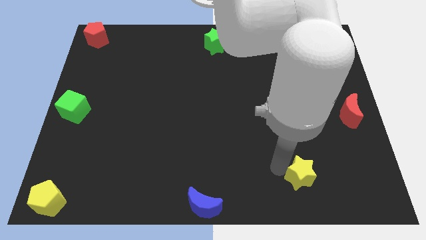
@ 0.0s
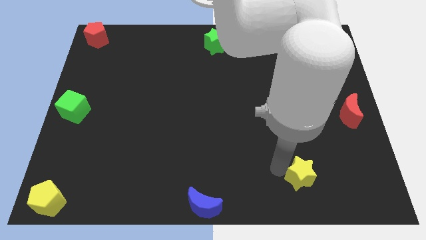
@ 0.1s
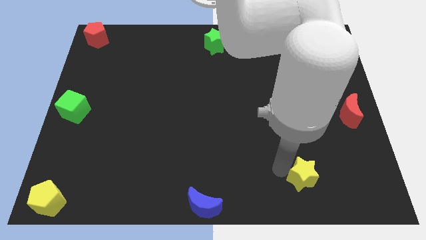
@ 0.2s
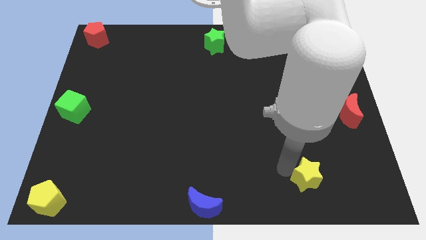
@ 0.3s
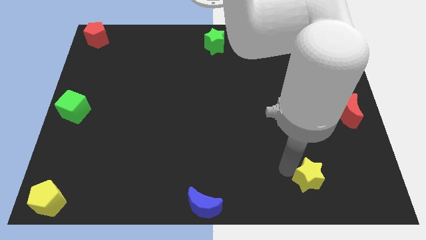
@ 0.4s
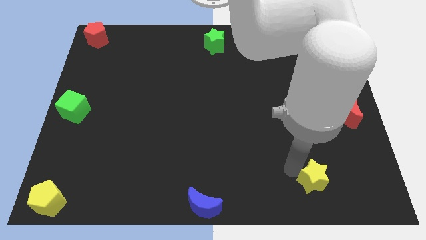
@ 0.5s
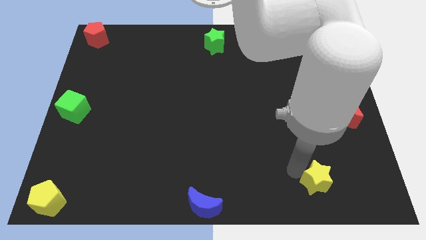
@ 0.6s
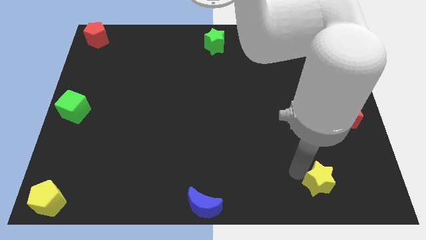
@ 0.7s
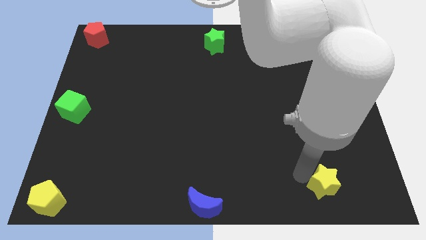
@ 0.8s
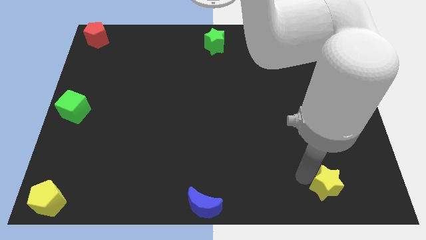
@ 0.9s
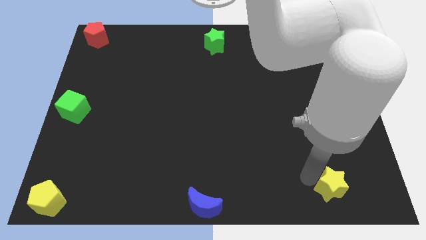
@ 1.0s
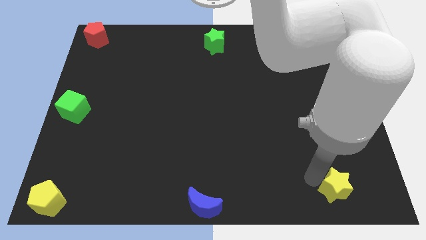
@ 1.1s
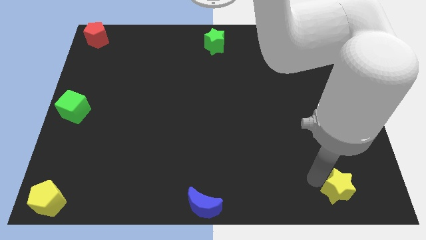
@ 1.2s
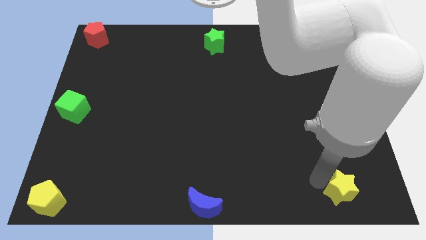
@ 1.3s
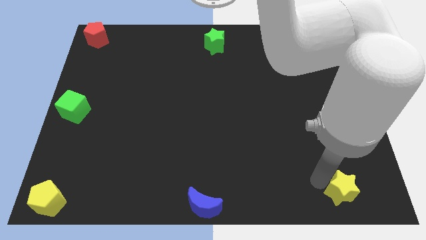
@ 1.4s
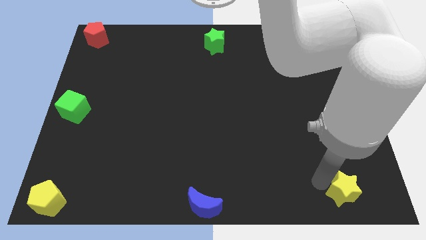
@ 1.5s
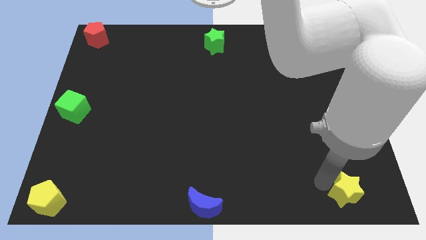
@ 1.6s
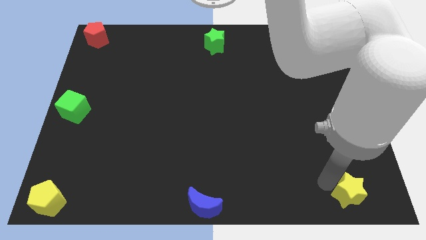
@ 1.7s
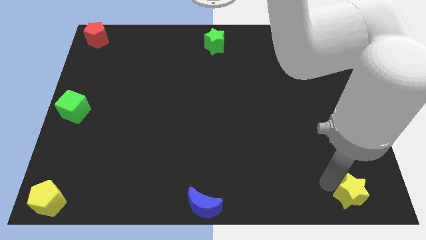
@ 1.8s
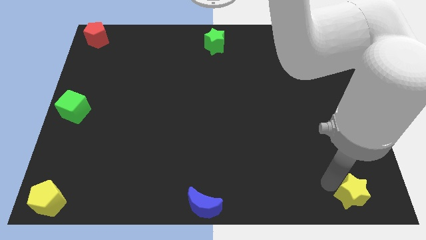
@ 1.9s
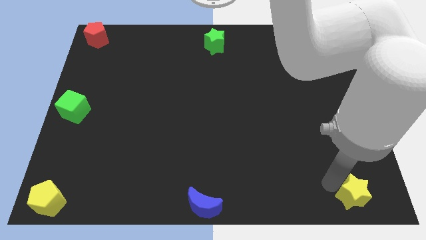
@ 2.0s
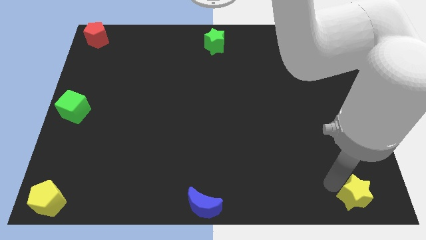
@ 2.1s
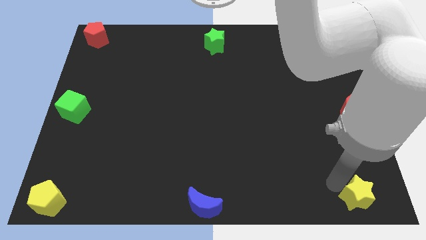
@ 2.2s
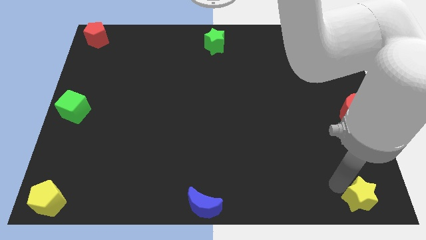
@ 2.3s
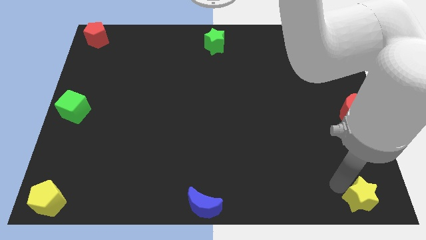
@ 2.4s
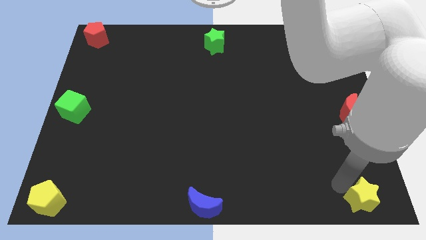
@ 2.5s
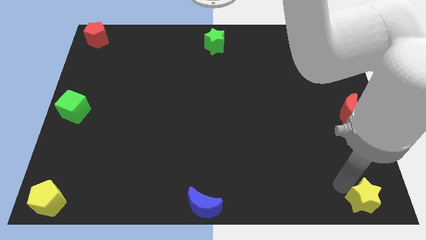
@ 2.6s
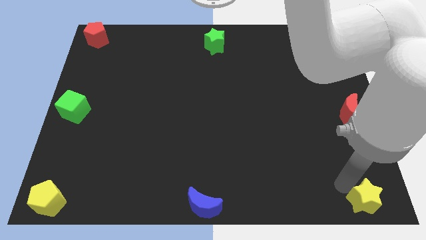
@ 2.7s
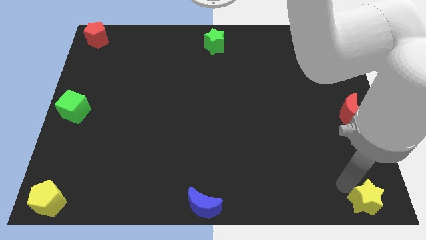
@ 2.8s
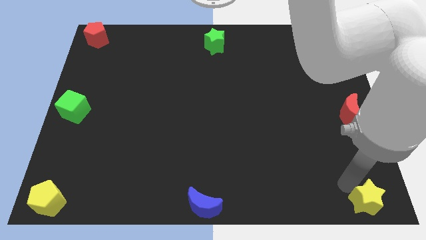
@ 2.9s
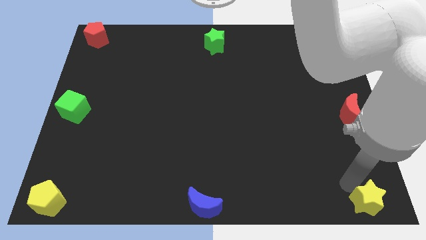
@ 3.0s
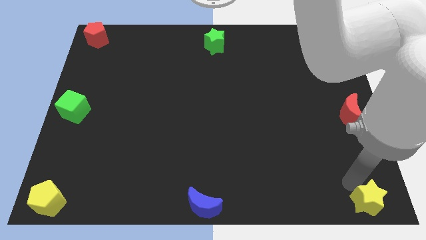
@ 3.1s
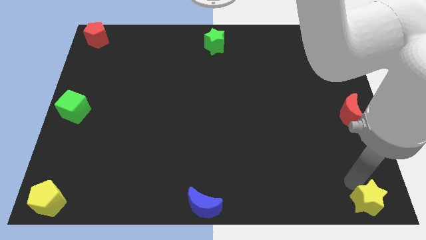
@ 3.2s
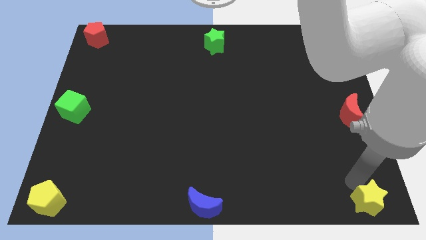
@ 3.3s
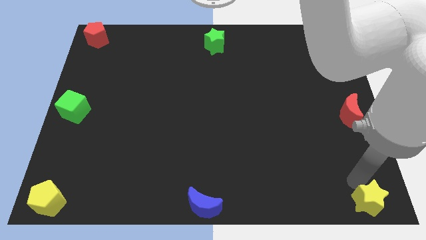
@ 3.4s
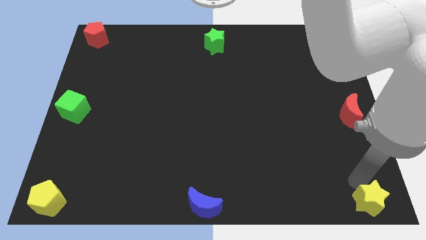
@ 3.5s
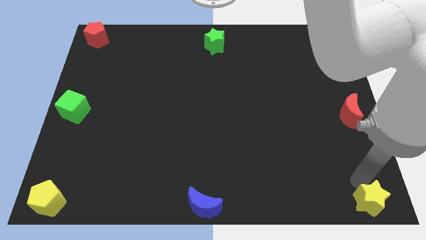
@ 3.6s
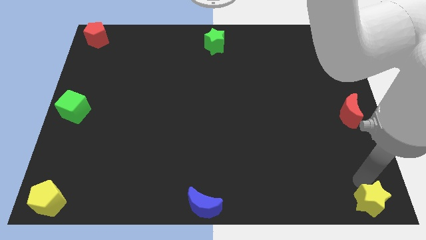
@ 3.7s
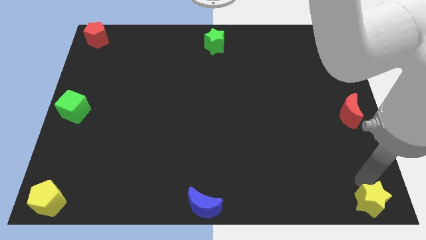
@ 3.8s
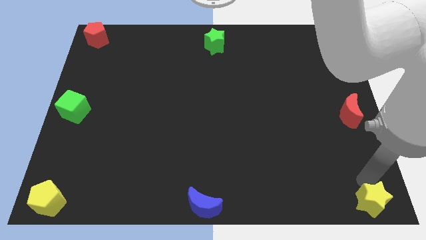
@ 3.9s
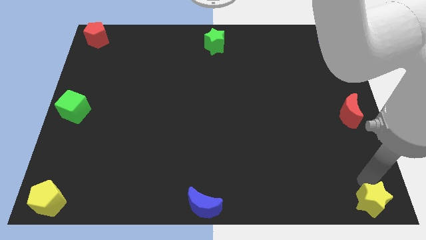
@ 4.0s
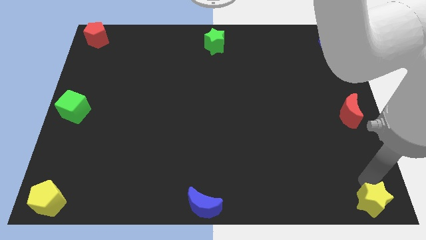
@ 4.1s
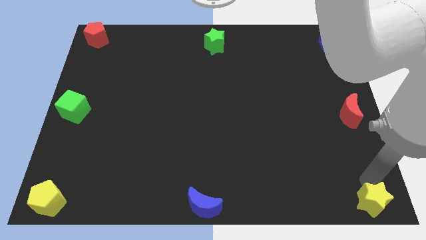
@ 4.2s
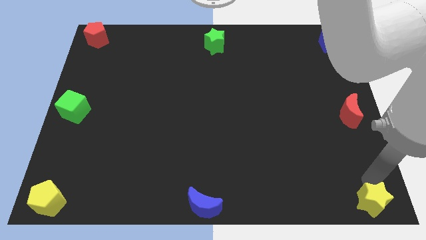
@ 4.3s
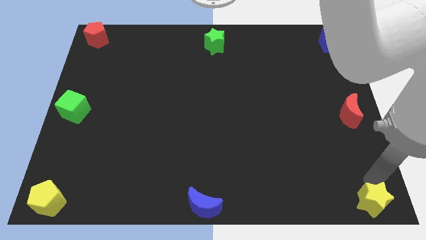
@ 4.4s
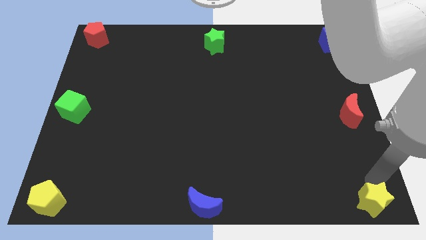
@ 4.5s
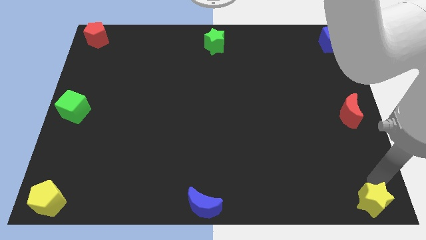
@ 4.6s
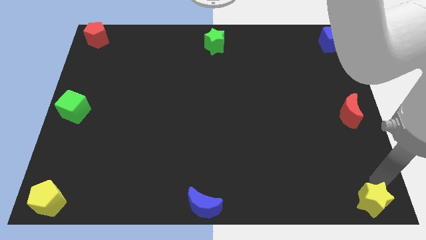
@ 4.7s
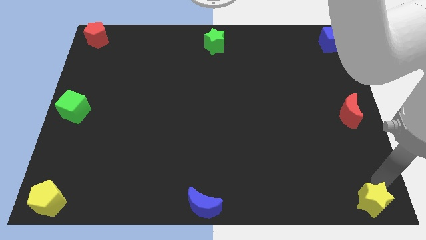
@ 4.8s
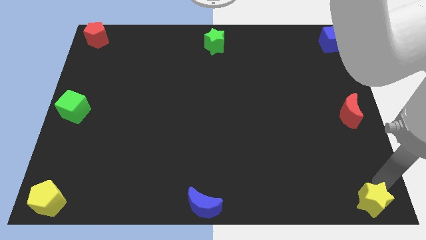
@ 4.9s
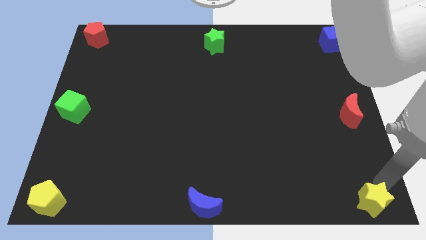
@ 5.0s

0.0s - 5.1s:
place the yellow star at the bottom right corner of the board

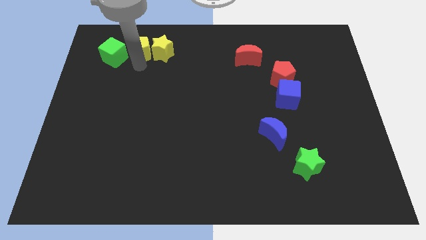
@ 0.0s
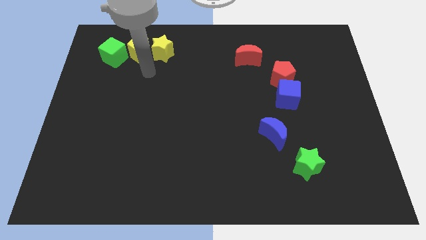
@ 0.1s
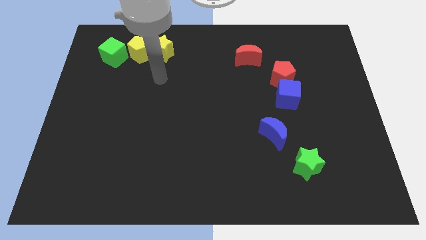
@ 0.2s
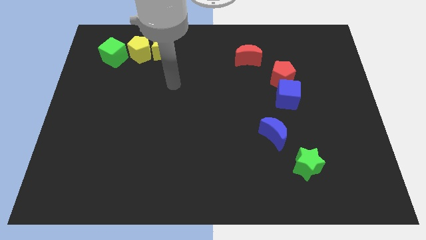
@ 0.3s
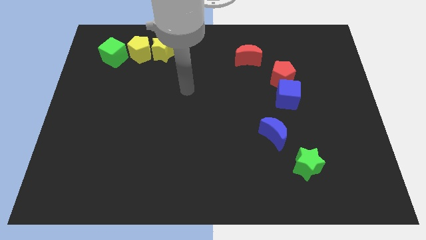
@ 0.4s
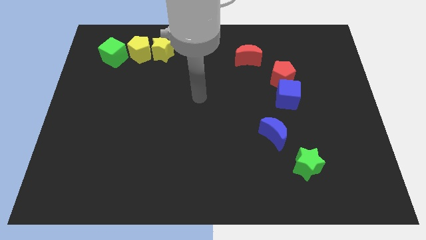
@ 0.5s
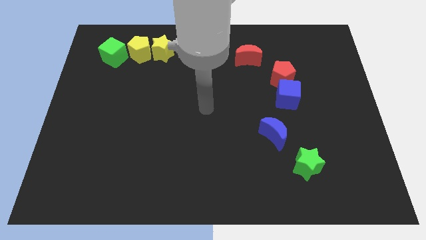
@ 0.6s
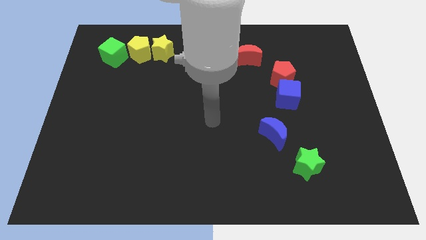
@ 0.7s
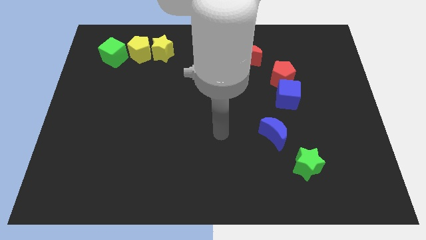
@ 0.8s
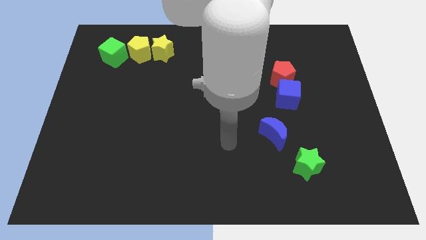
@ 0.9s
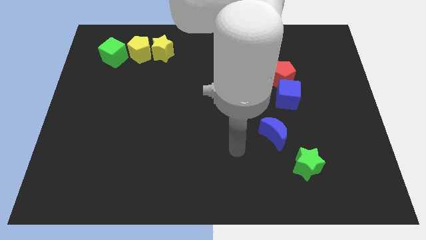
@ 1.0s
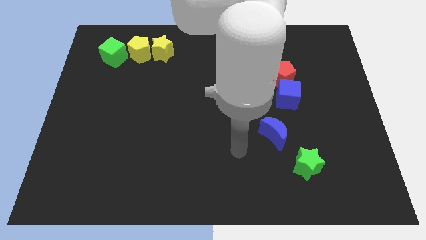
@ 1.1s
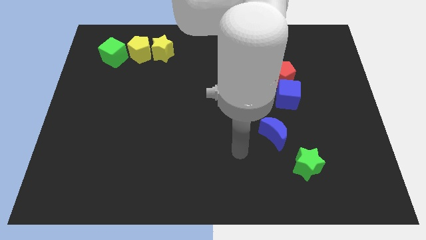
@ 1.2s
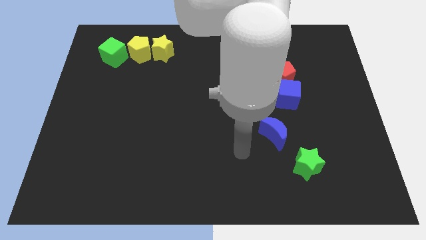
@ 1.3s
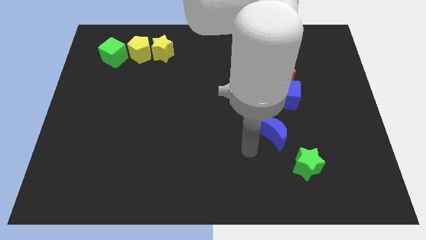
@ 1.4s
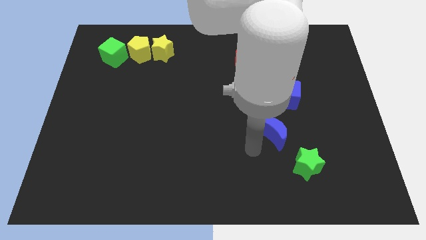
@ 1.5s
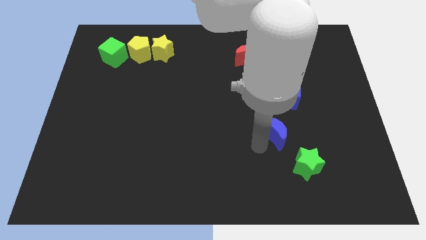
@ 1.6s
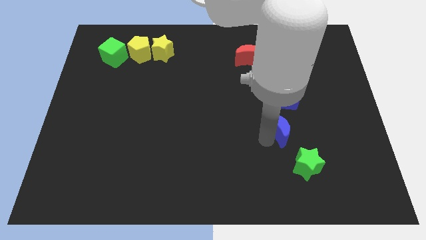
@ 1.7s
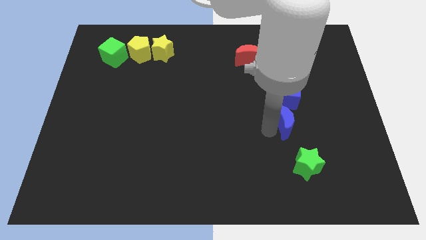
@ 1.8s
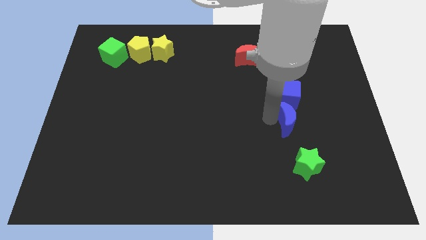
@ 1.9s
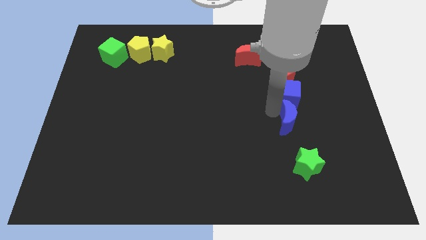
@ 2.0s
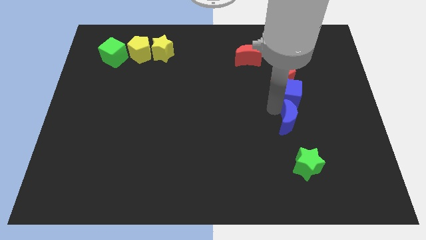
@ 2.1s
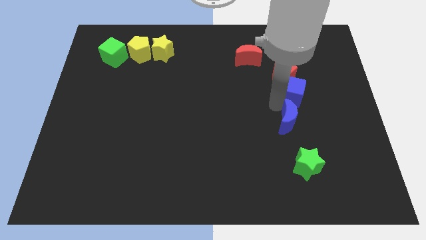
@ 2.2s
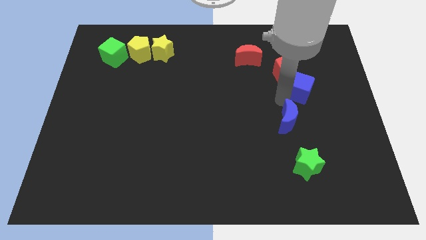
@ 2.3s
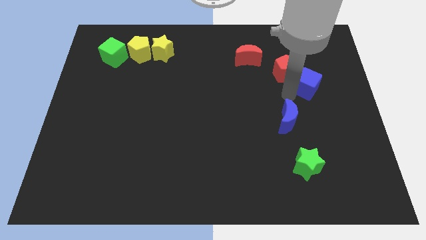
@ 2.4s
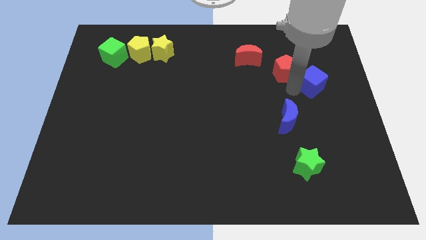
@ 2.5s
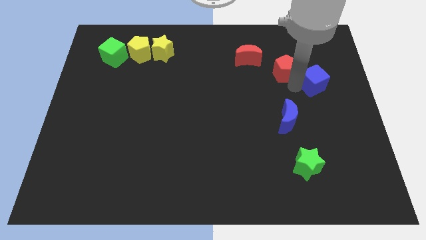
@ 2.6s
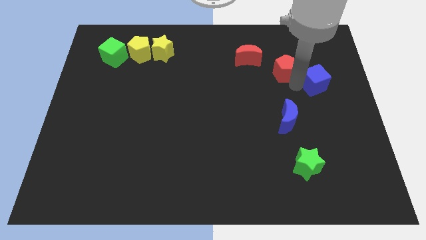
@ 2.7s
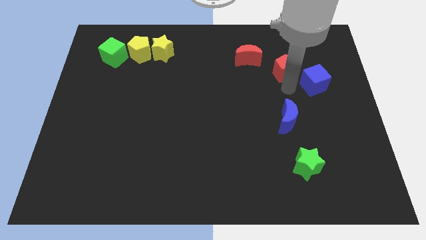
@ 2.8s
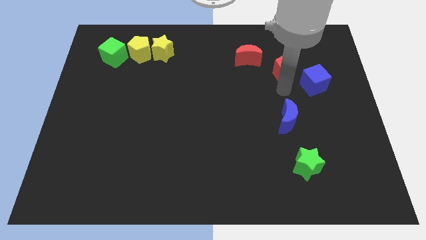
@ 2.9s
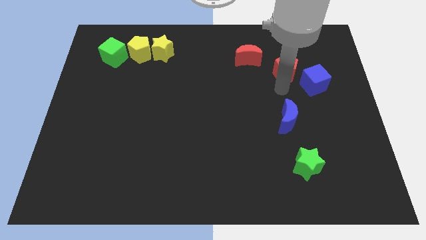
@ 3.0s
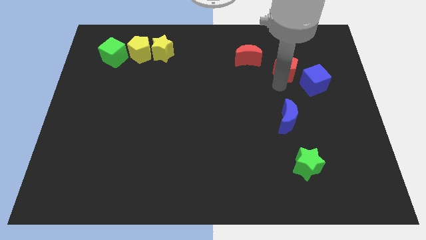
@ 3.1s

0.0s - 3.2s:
separate the blue blocks

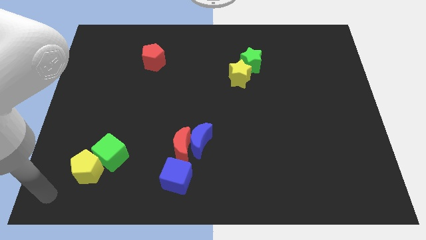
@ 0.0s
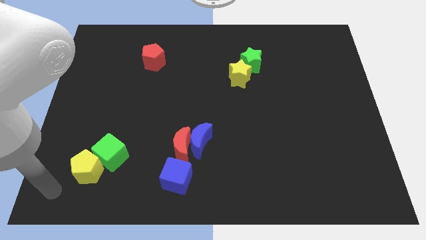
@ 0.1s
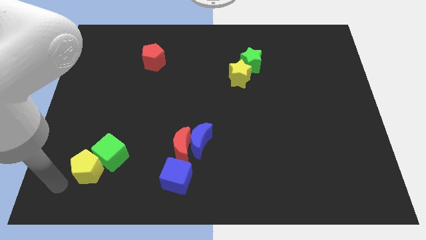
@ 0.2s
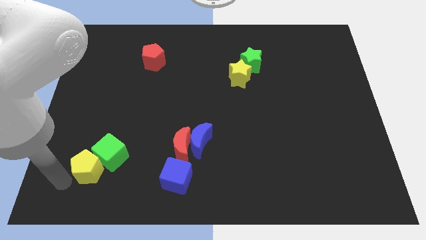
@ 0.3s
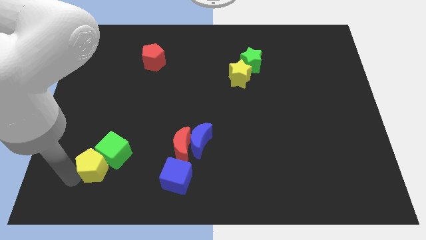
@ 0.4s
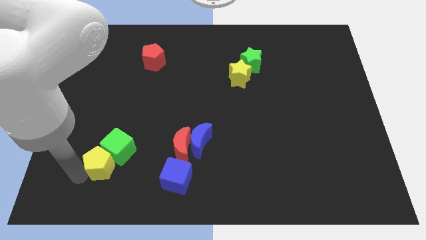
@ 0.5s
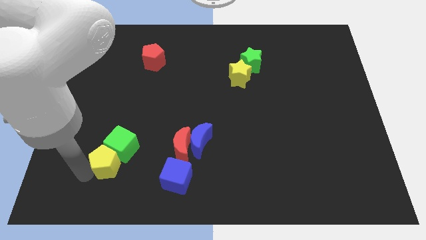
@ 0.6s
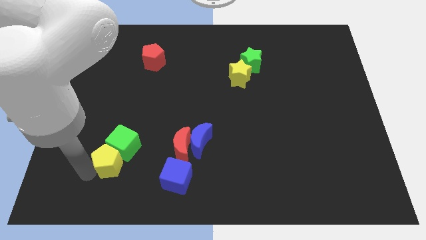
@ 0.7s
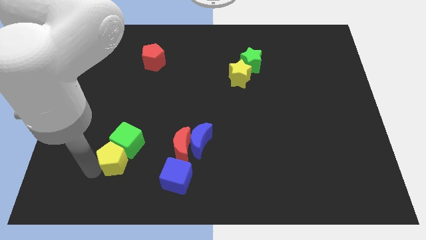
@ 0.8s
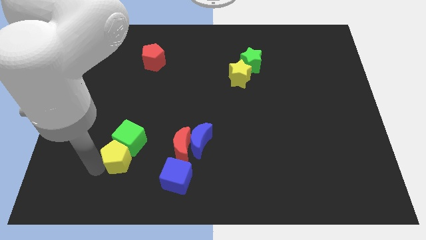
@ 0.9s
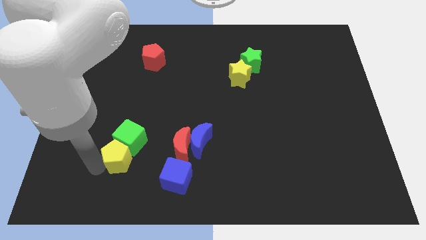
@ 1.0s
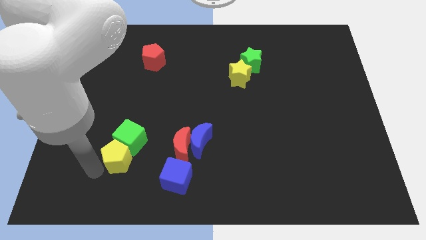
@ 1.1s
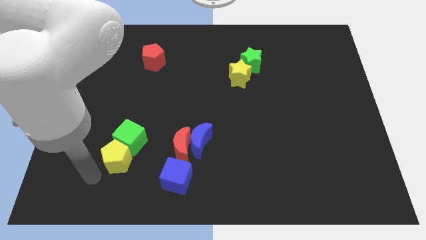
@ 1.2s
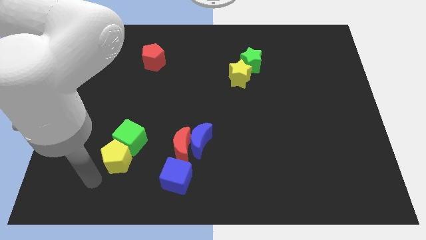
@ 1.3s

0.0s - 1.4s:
move the yellow pentagon and the green cube towards the center
